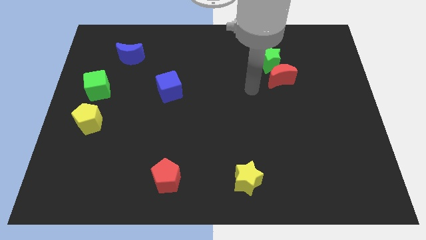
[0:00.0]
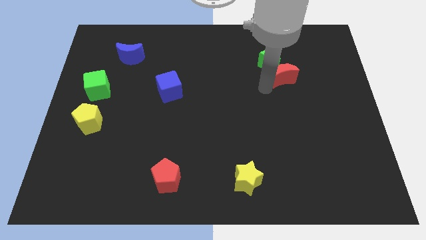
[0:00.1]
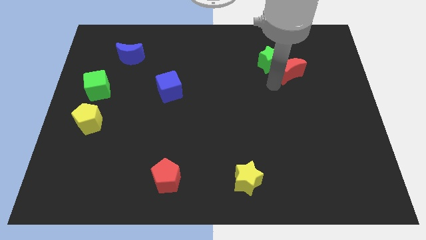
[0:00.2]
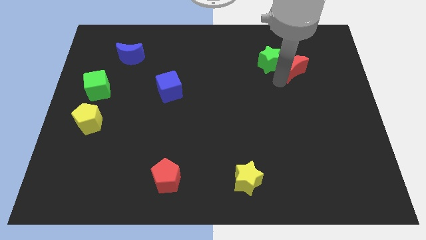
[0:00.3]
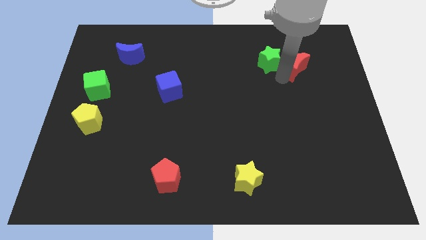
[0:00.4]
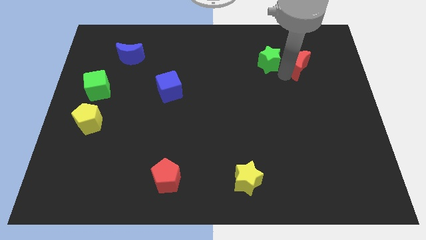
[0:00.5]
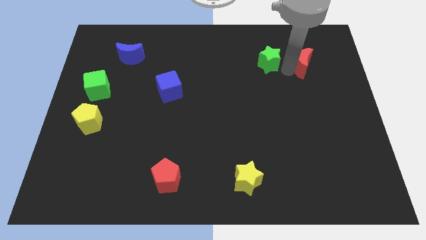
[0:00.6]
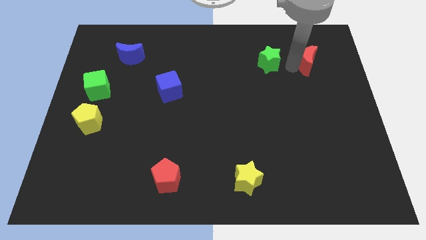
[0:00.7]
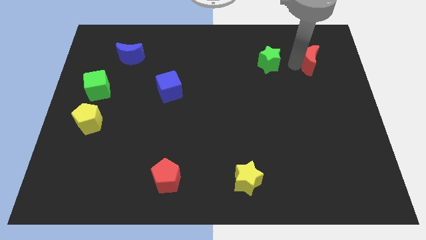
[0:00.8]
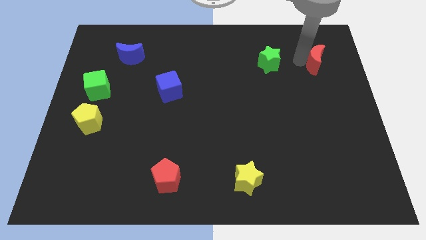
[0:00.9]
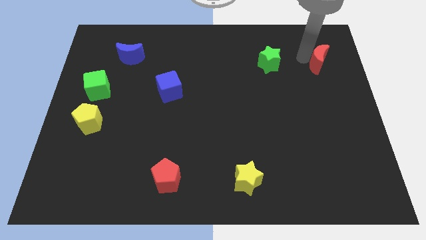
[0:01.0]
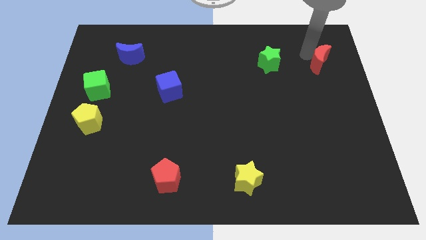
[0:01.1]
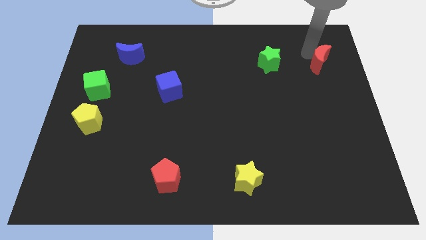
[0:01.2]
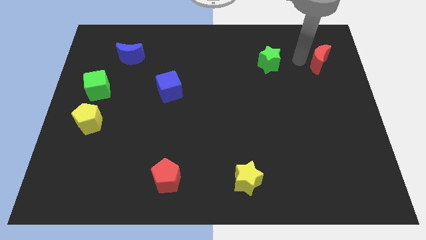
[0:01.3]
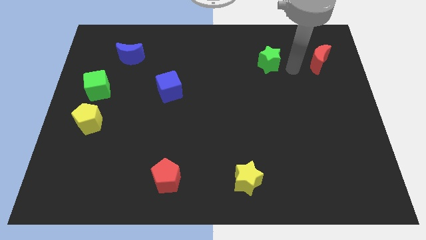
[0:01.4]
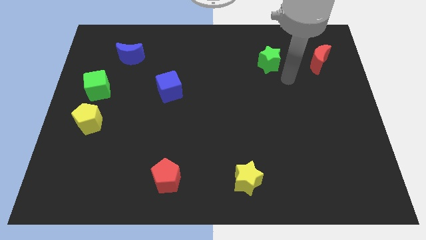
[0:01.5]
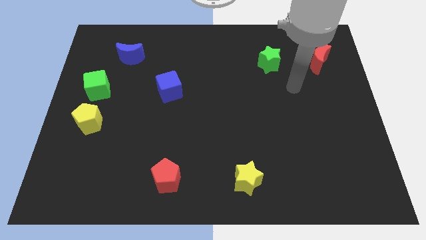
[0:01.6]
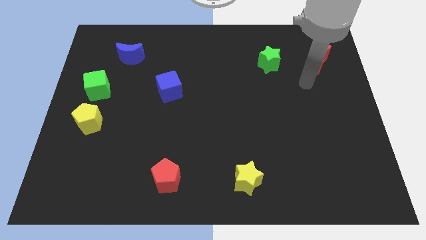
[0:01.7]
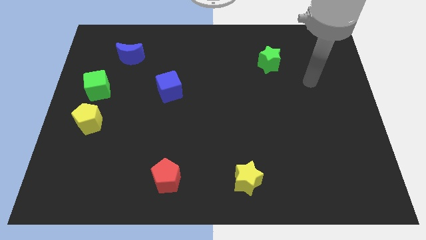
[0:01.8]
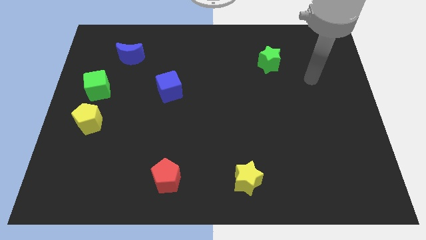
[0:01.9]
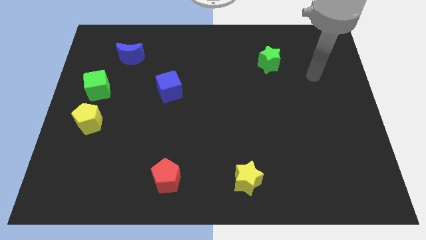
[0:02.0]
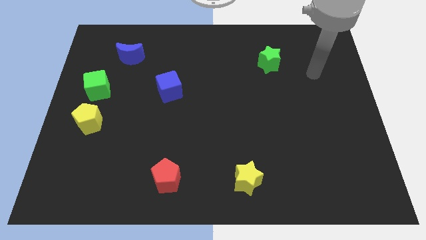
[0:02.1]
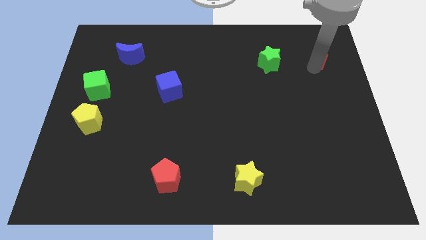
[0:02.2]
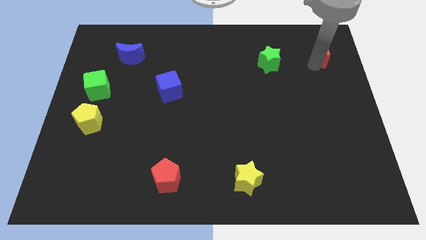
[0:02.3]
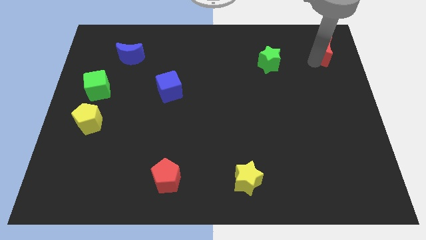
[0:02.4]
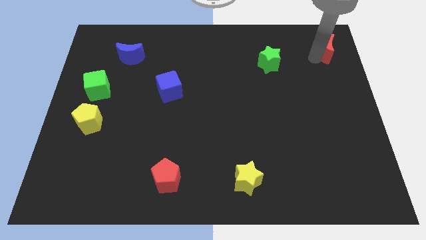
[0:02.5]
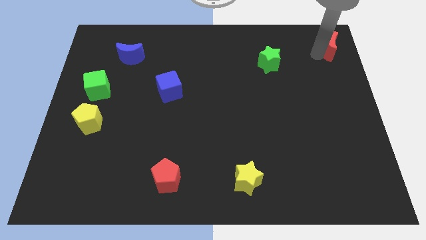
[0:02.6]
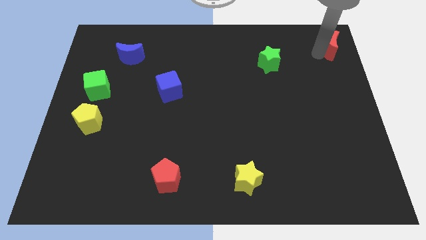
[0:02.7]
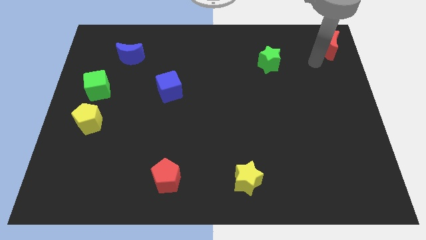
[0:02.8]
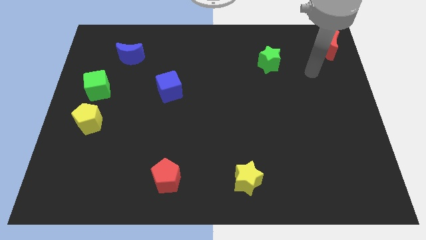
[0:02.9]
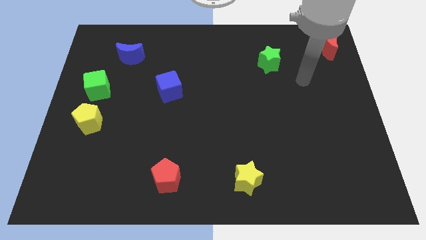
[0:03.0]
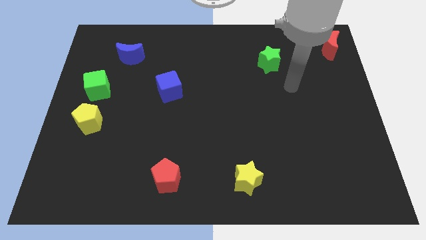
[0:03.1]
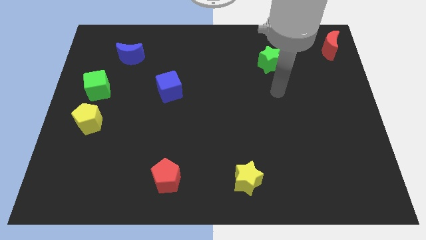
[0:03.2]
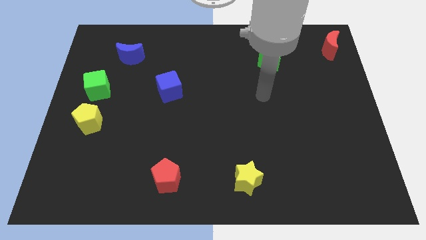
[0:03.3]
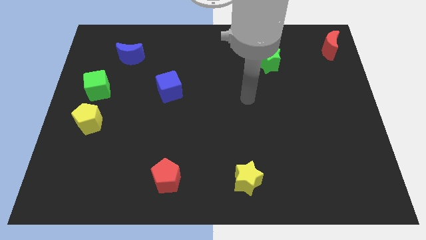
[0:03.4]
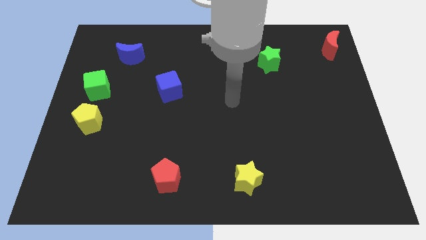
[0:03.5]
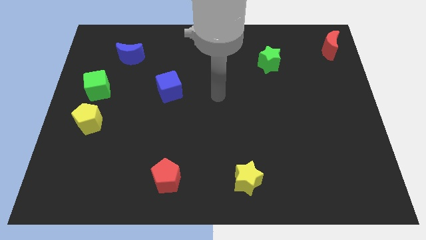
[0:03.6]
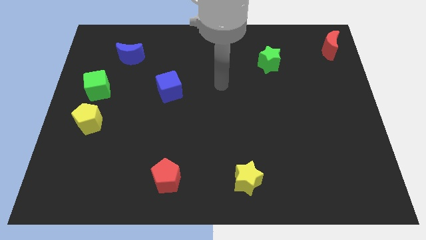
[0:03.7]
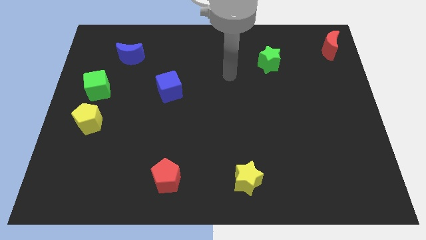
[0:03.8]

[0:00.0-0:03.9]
move the red crescent to the top right corner of the board

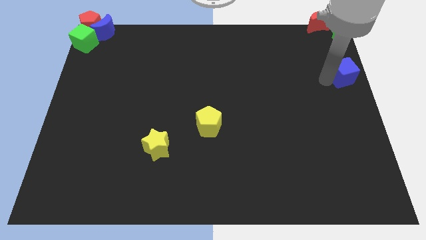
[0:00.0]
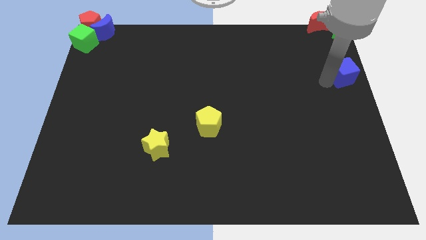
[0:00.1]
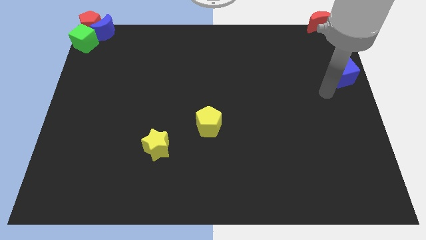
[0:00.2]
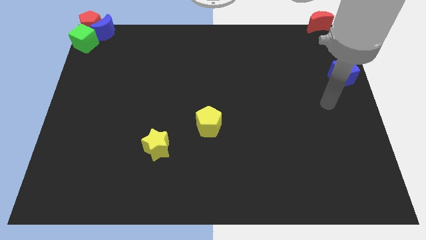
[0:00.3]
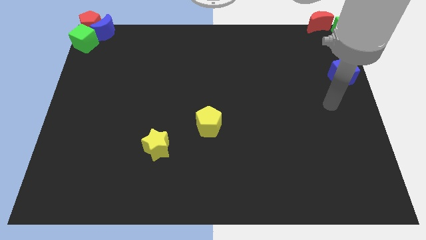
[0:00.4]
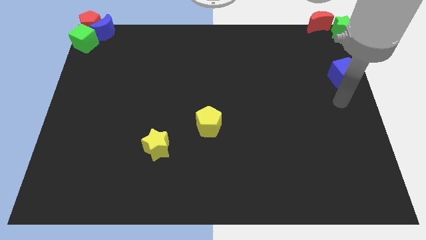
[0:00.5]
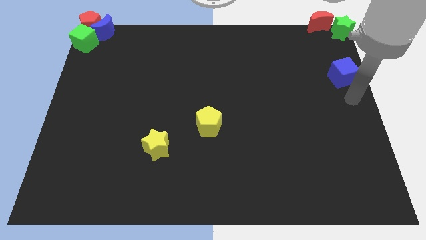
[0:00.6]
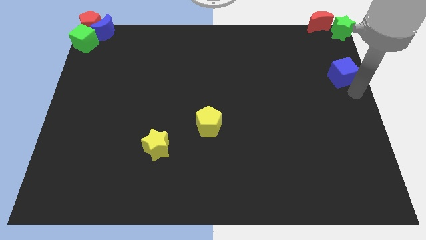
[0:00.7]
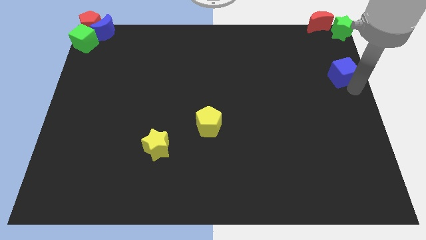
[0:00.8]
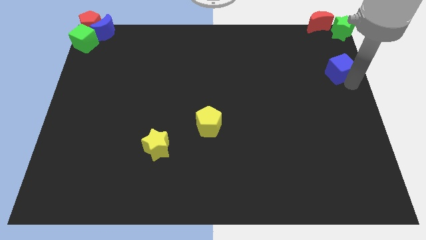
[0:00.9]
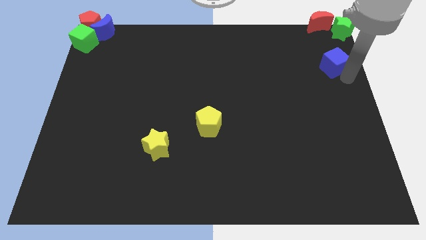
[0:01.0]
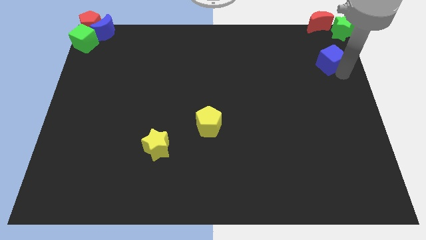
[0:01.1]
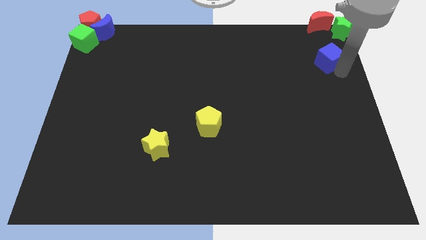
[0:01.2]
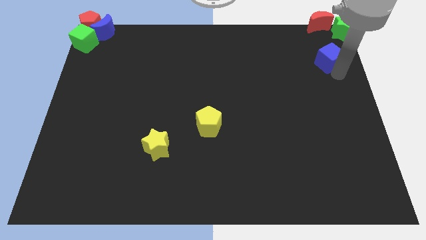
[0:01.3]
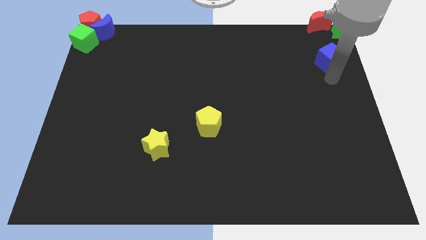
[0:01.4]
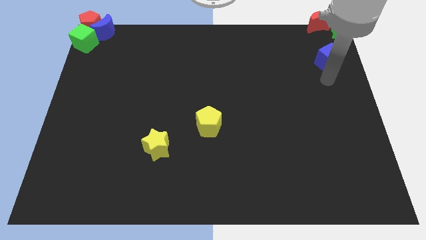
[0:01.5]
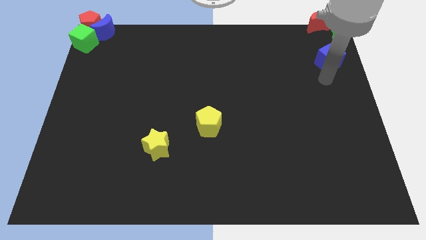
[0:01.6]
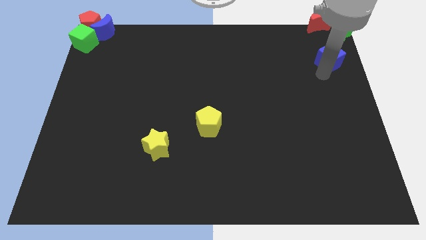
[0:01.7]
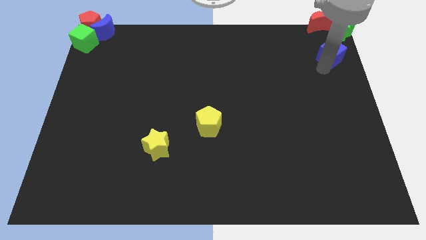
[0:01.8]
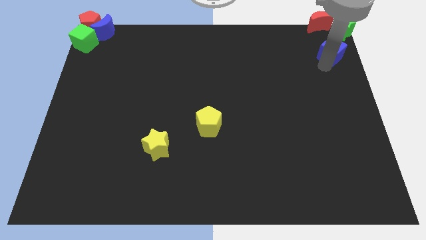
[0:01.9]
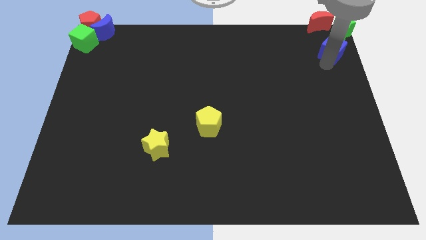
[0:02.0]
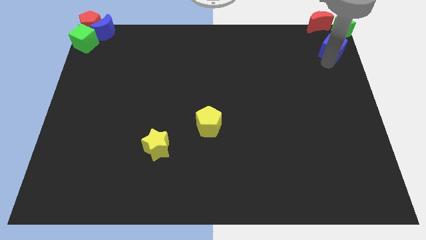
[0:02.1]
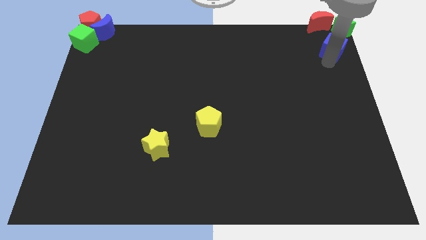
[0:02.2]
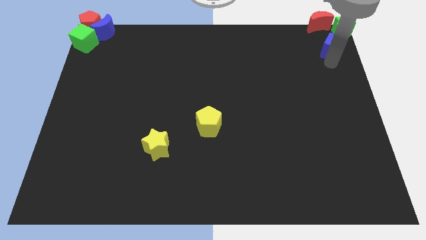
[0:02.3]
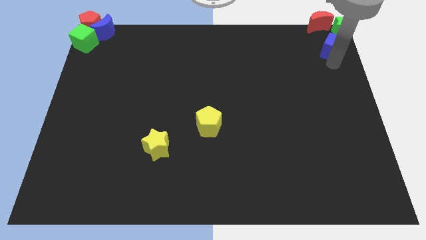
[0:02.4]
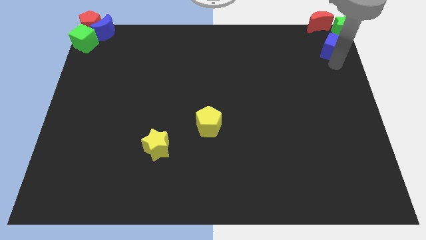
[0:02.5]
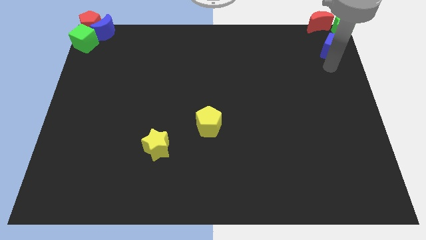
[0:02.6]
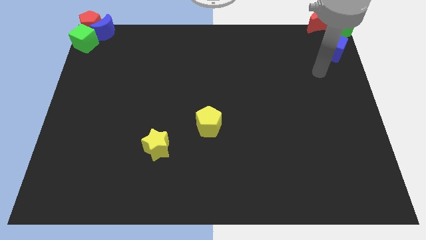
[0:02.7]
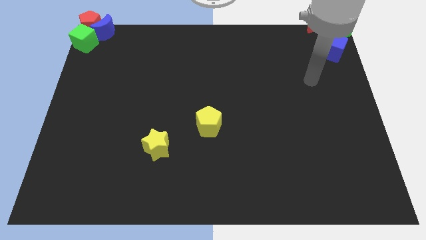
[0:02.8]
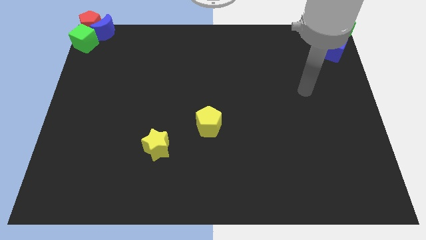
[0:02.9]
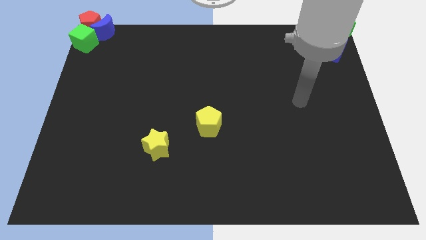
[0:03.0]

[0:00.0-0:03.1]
place the blue cube below the green star at the top right

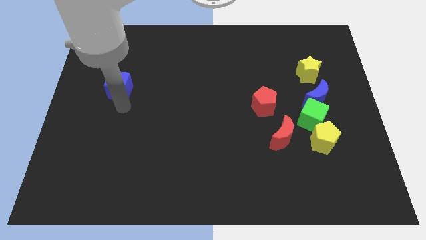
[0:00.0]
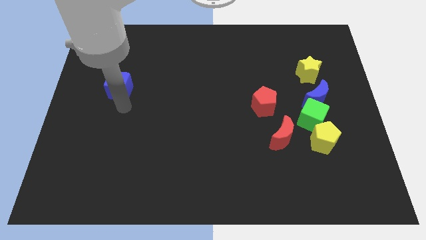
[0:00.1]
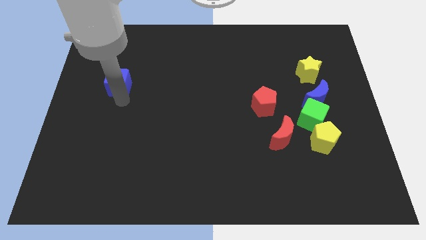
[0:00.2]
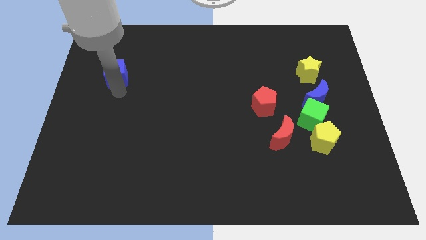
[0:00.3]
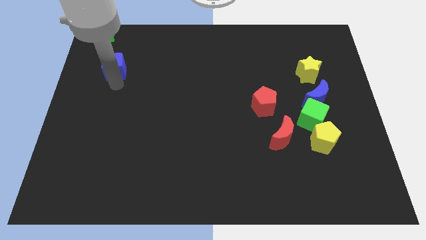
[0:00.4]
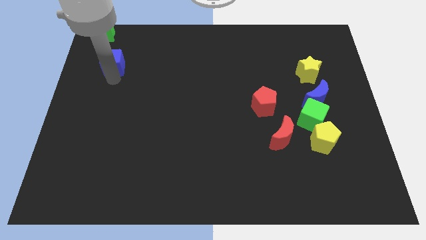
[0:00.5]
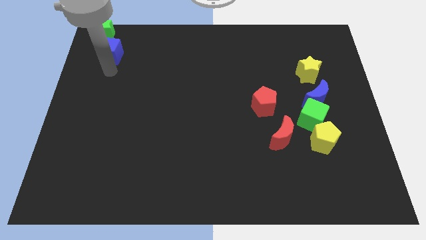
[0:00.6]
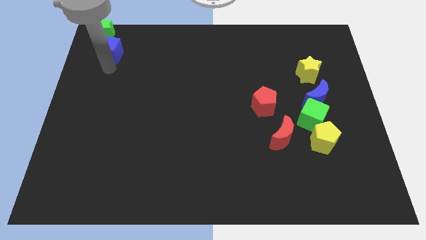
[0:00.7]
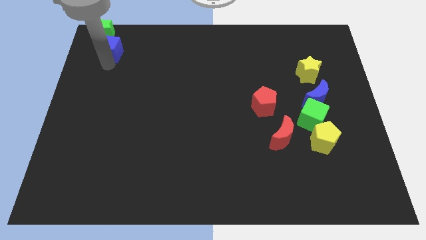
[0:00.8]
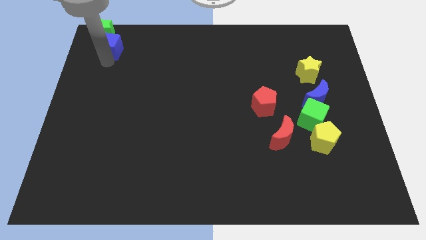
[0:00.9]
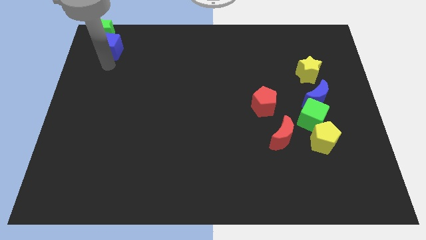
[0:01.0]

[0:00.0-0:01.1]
put blue cube below green star

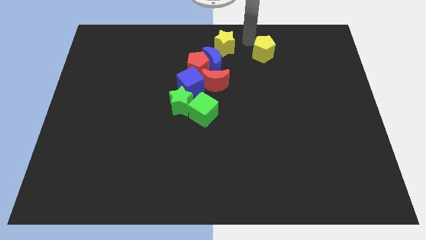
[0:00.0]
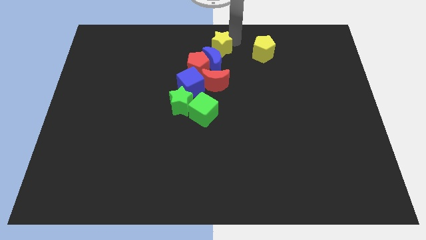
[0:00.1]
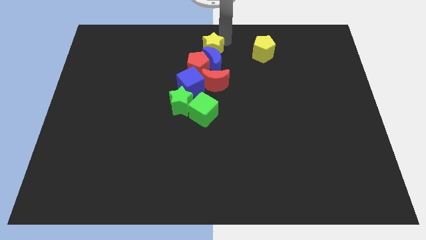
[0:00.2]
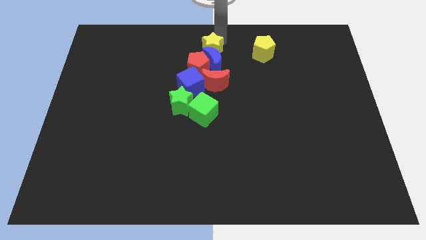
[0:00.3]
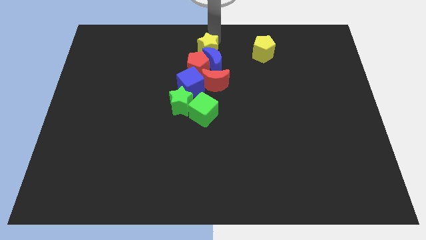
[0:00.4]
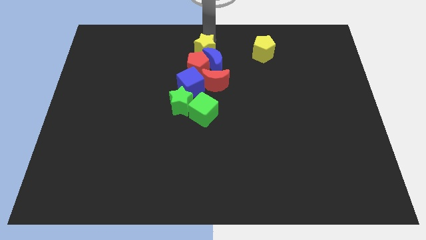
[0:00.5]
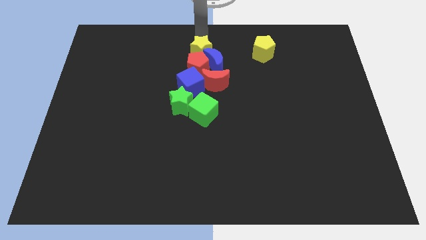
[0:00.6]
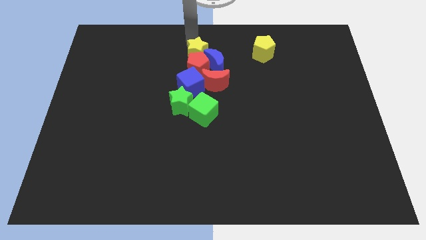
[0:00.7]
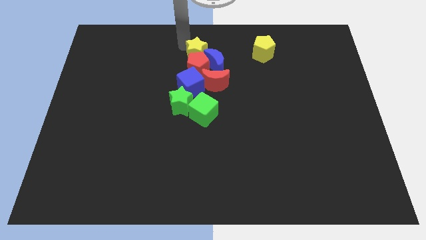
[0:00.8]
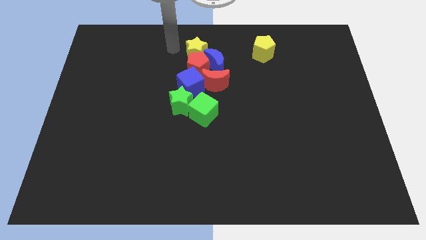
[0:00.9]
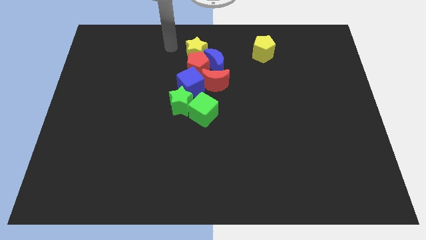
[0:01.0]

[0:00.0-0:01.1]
place yellow star on top of red pentagon
